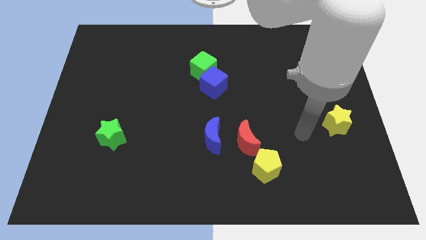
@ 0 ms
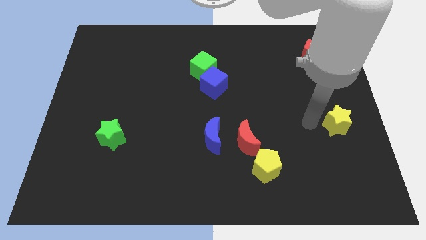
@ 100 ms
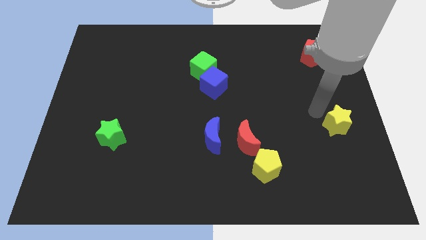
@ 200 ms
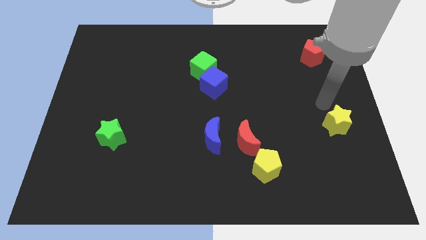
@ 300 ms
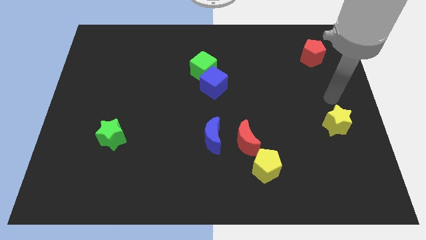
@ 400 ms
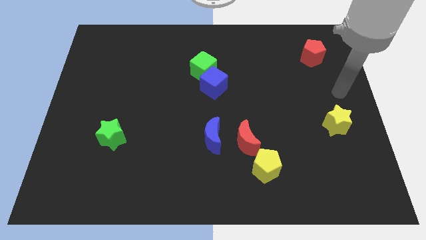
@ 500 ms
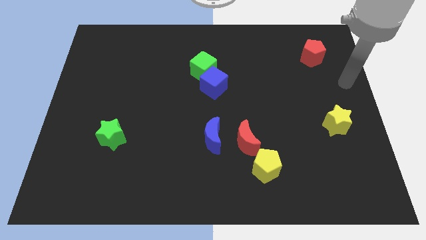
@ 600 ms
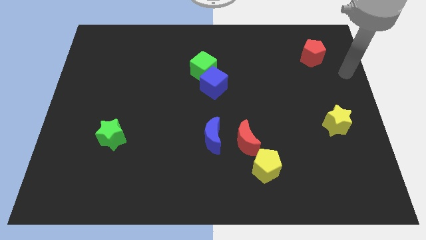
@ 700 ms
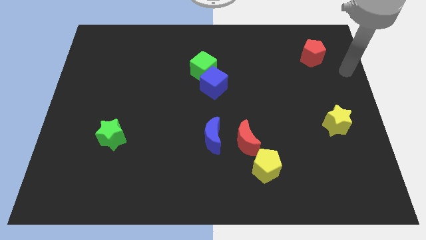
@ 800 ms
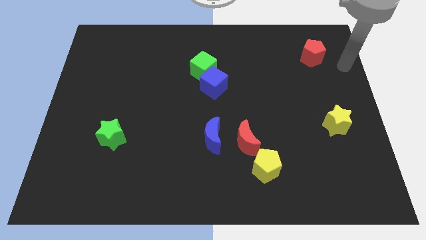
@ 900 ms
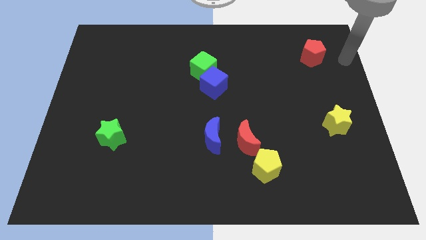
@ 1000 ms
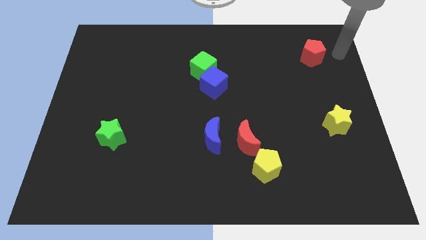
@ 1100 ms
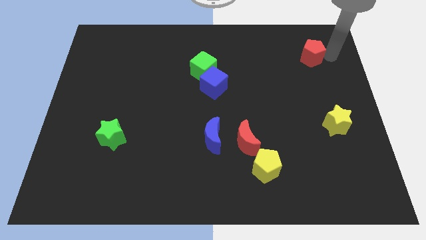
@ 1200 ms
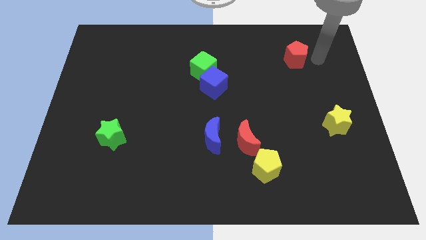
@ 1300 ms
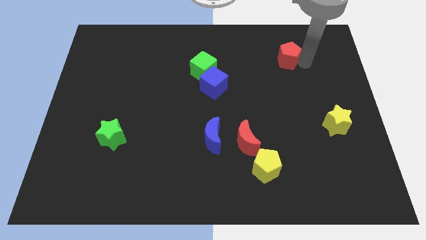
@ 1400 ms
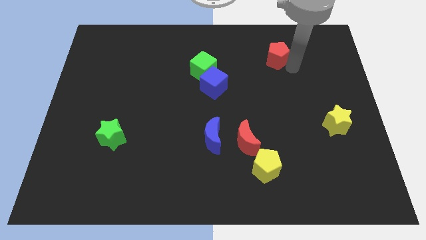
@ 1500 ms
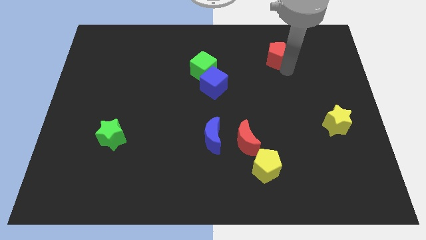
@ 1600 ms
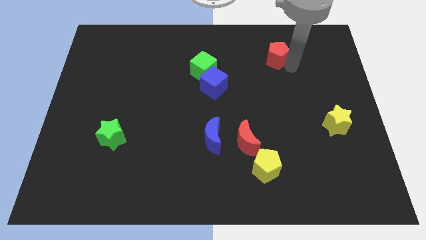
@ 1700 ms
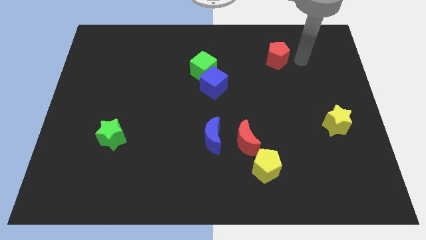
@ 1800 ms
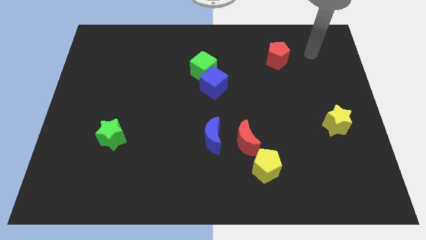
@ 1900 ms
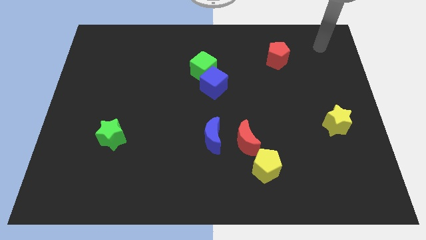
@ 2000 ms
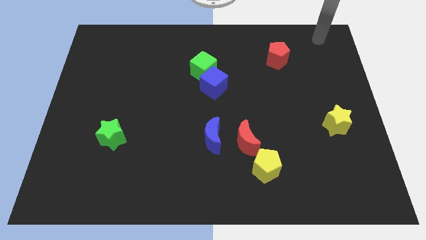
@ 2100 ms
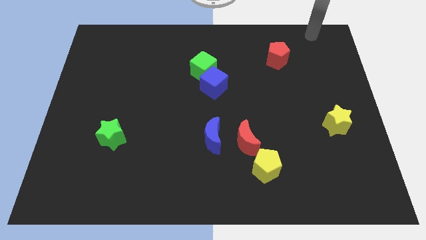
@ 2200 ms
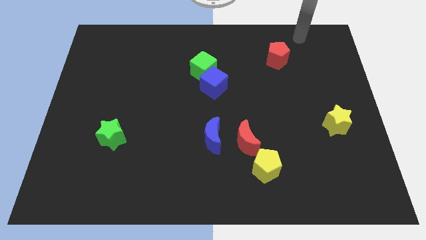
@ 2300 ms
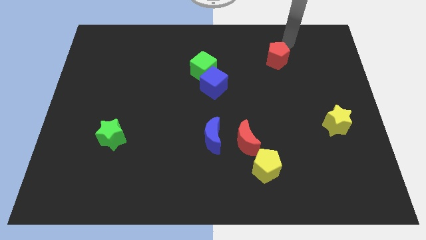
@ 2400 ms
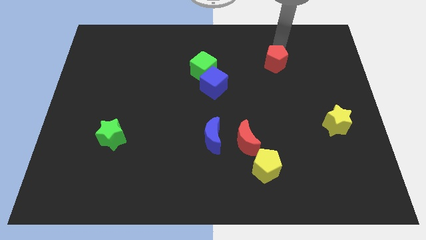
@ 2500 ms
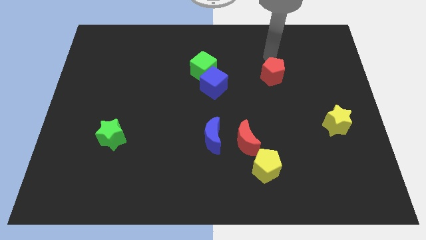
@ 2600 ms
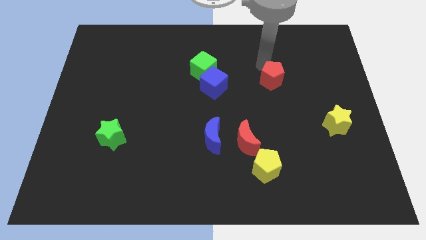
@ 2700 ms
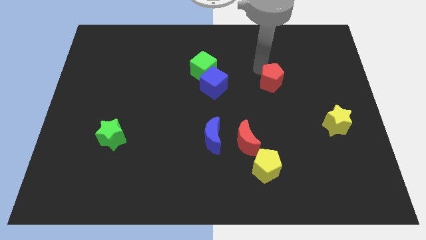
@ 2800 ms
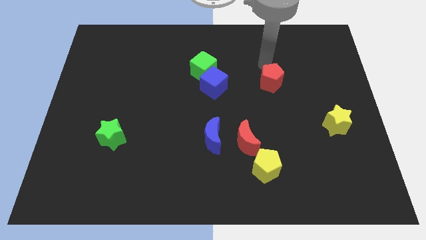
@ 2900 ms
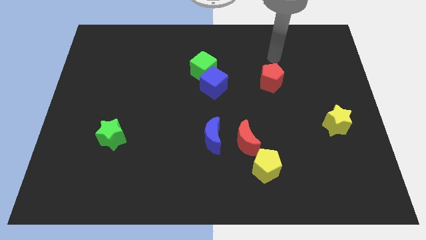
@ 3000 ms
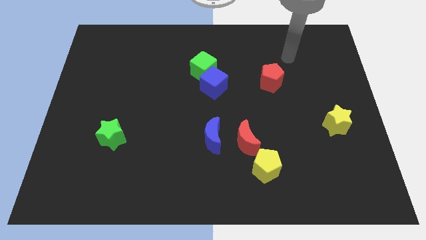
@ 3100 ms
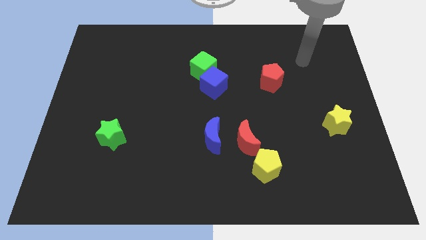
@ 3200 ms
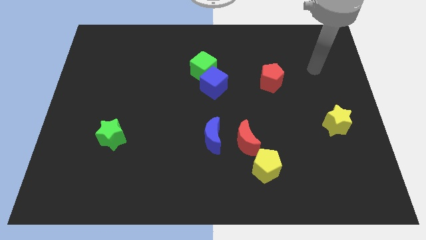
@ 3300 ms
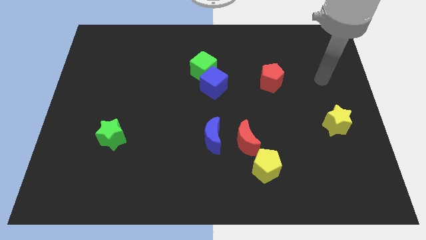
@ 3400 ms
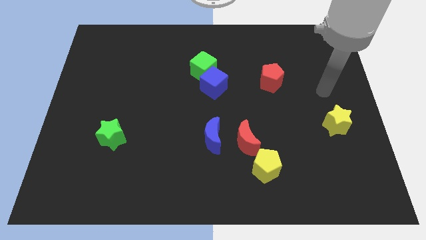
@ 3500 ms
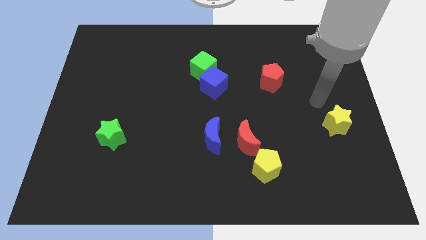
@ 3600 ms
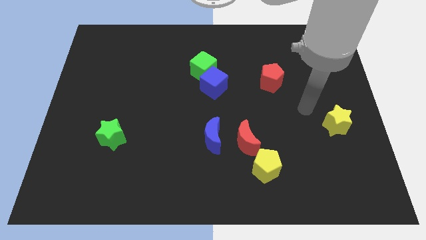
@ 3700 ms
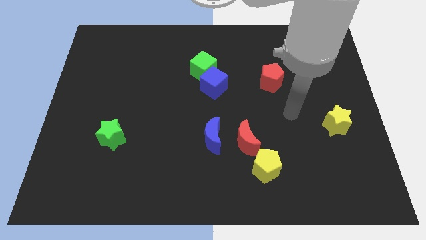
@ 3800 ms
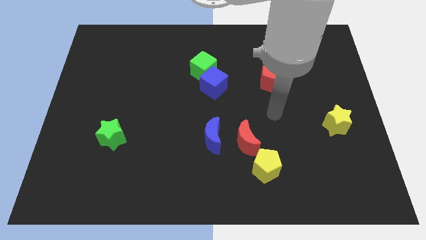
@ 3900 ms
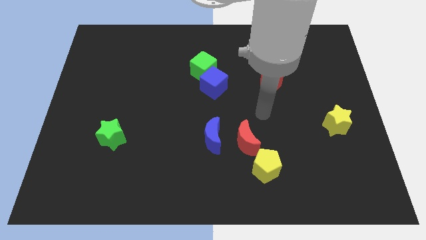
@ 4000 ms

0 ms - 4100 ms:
go and push the red pentagon towards the center

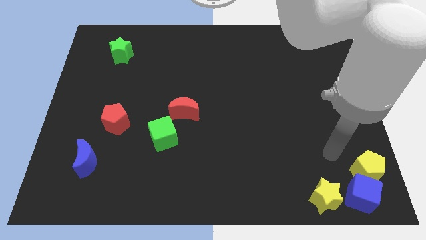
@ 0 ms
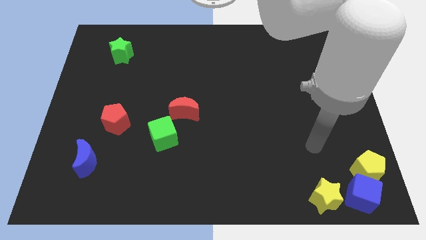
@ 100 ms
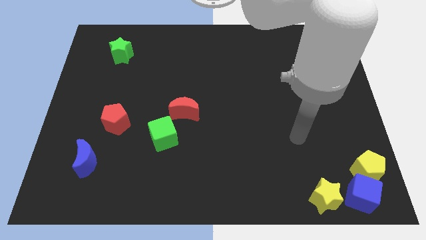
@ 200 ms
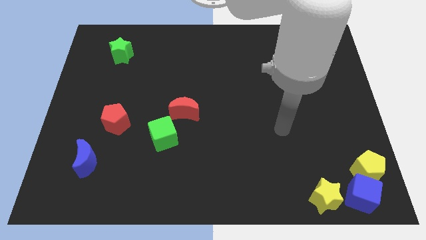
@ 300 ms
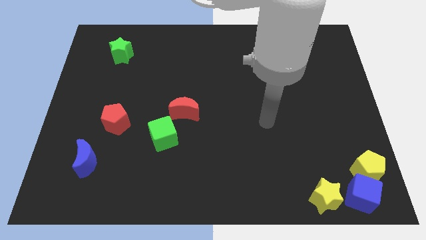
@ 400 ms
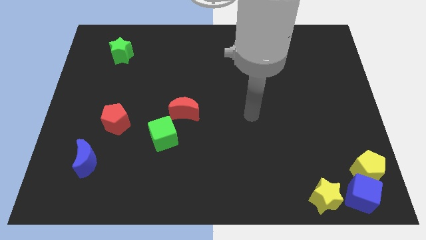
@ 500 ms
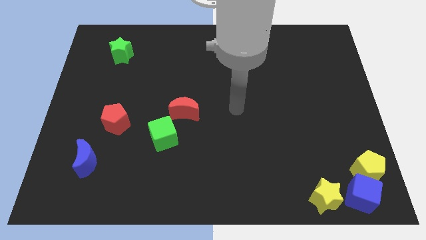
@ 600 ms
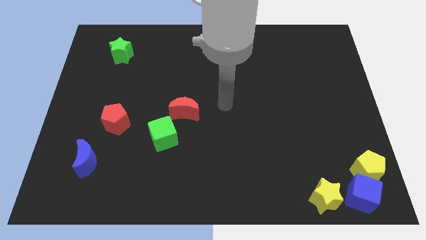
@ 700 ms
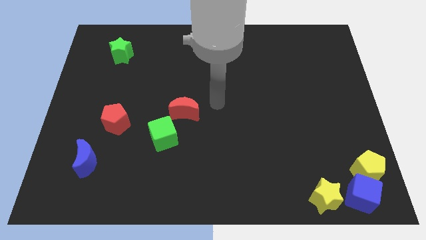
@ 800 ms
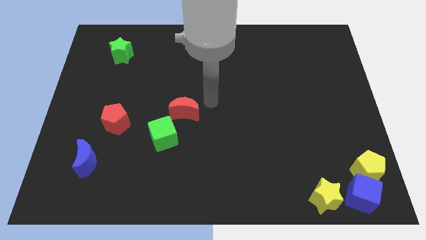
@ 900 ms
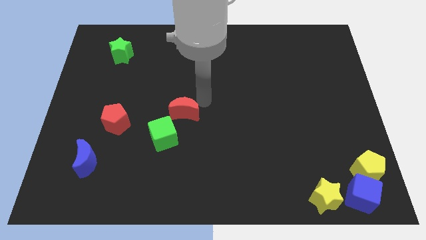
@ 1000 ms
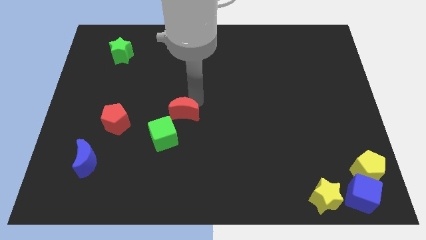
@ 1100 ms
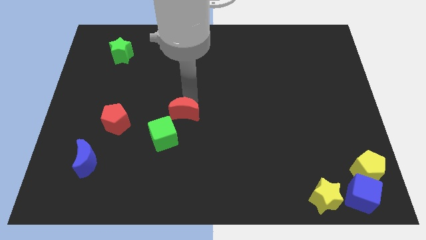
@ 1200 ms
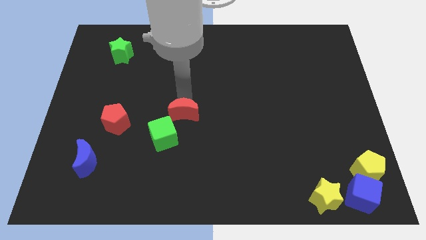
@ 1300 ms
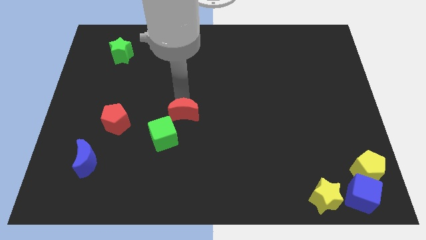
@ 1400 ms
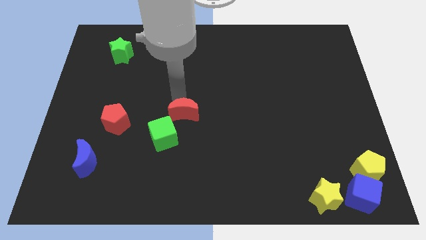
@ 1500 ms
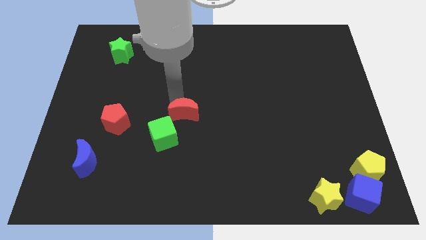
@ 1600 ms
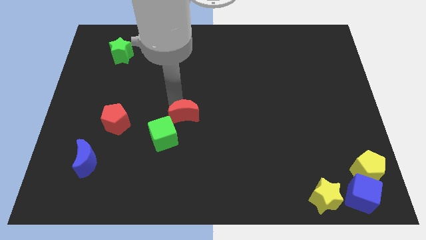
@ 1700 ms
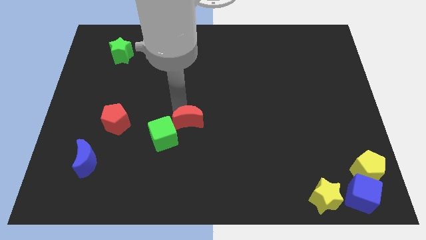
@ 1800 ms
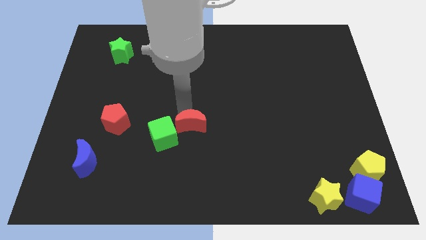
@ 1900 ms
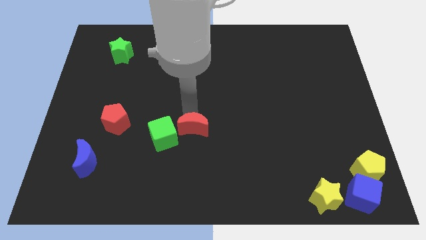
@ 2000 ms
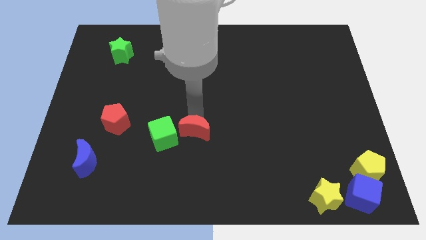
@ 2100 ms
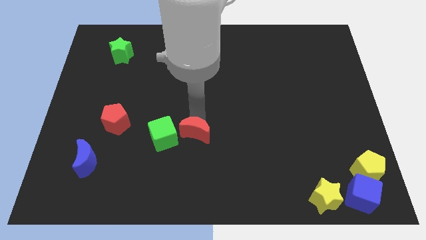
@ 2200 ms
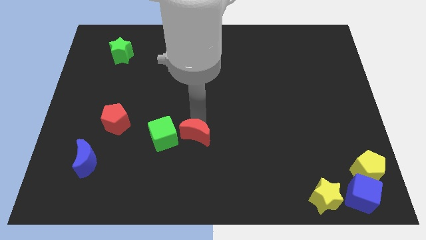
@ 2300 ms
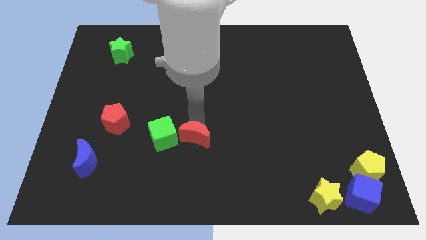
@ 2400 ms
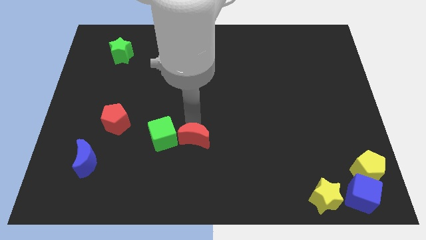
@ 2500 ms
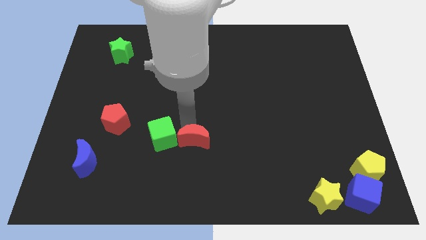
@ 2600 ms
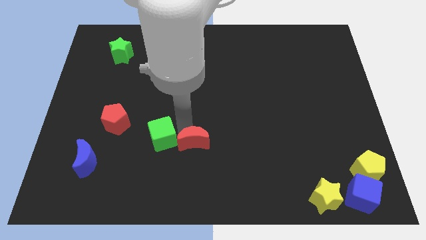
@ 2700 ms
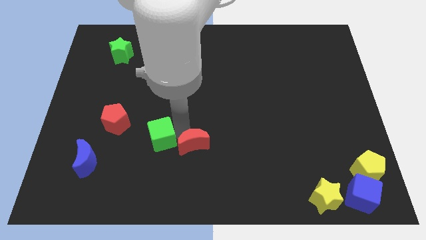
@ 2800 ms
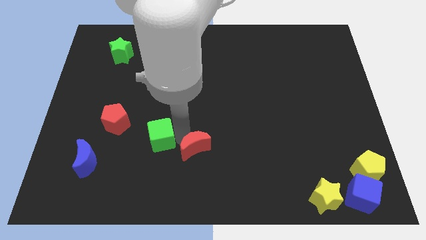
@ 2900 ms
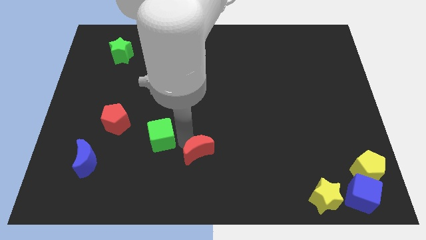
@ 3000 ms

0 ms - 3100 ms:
push the red crescent towards the bottom center

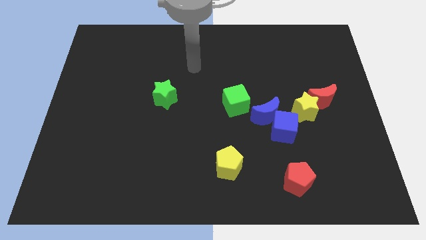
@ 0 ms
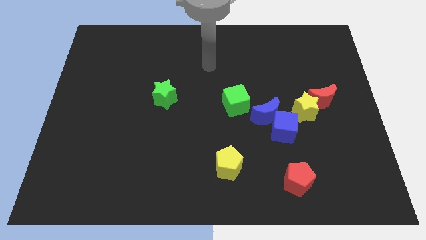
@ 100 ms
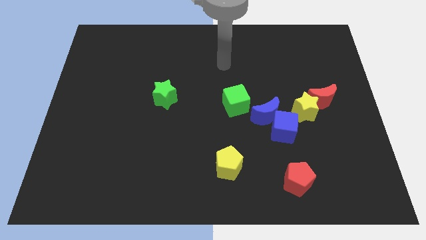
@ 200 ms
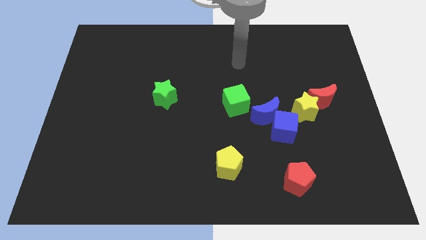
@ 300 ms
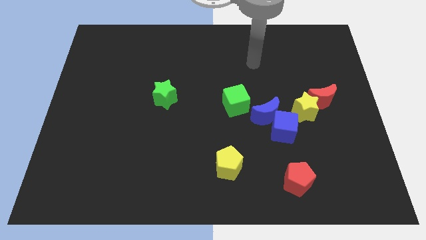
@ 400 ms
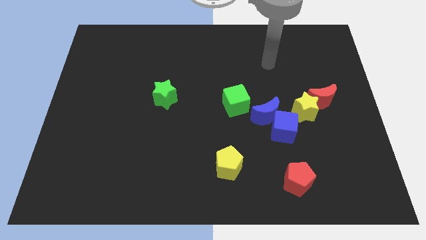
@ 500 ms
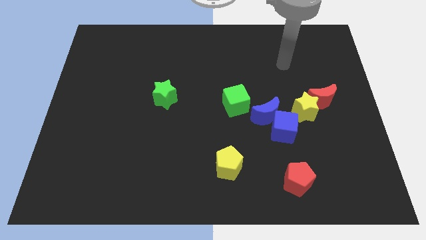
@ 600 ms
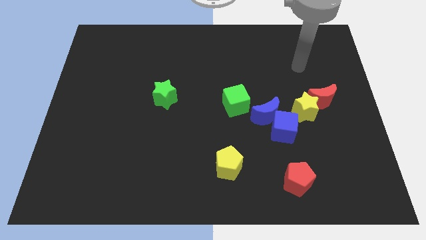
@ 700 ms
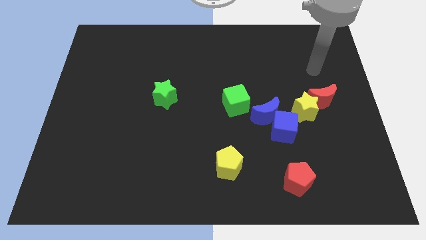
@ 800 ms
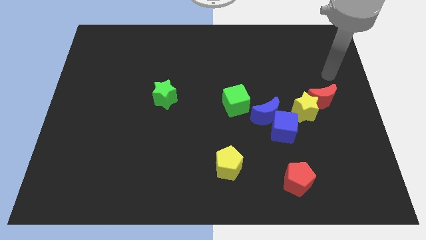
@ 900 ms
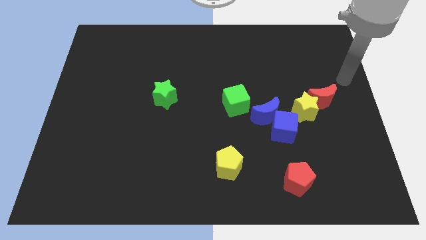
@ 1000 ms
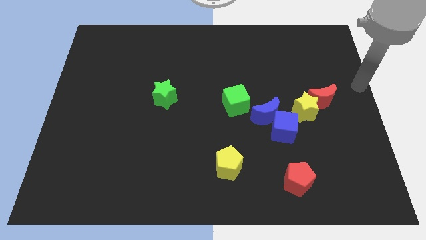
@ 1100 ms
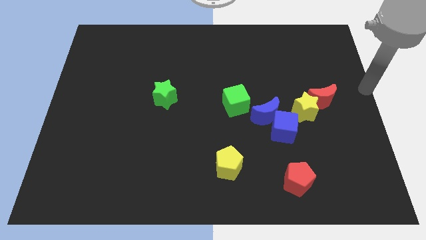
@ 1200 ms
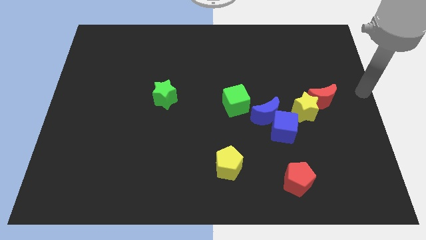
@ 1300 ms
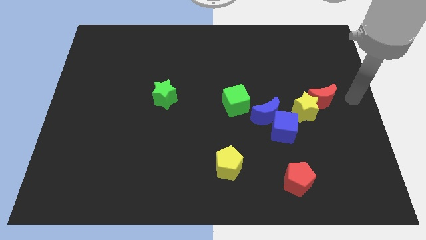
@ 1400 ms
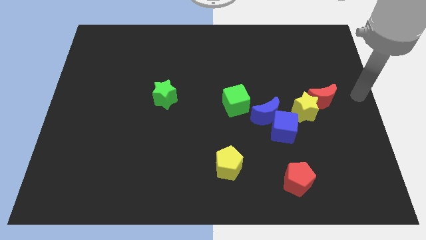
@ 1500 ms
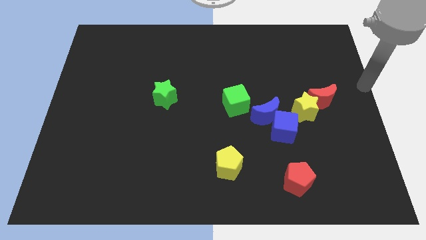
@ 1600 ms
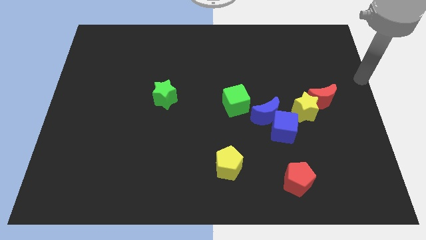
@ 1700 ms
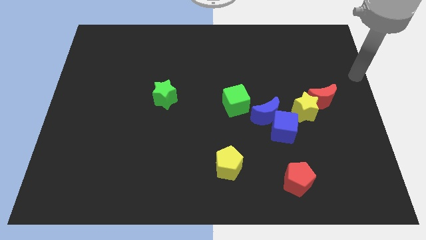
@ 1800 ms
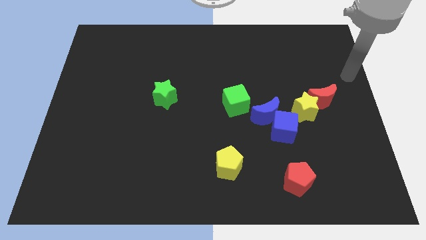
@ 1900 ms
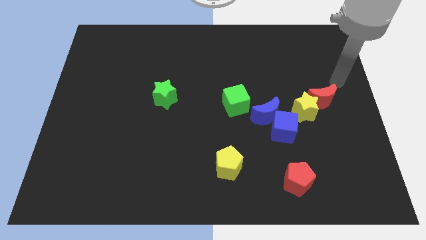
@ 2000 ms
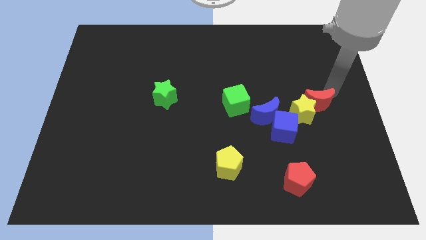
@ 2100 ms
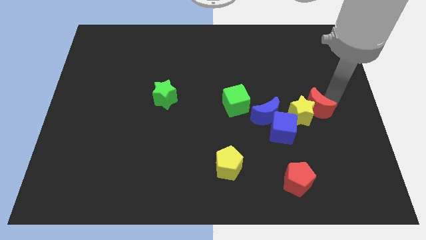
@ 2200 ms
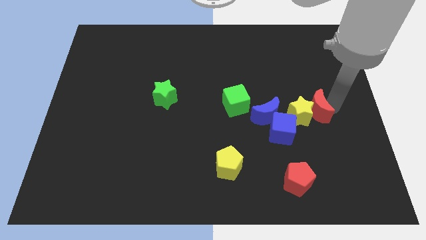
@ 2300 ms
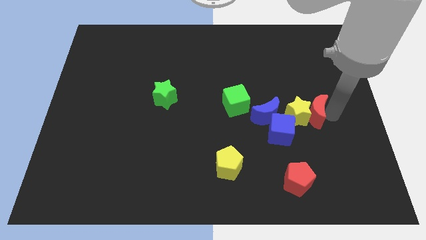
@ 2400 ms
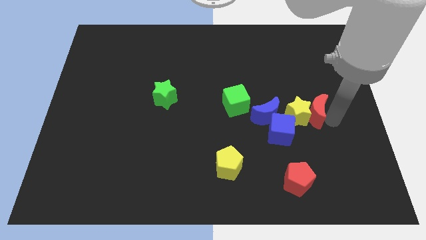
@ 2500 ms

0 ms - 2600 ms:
move the red moon along with the yellow star into the blue cube
